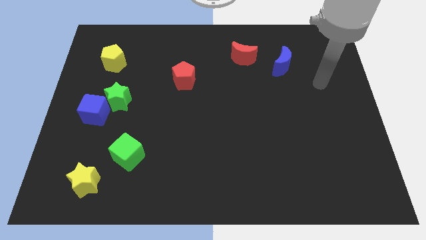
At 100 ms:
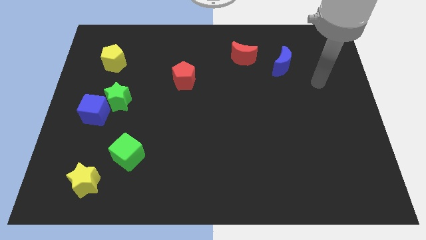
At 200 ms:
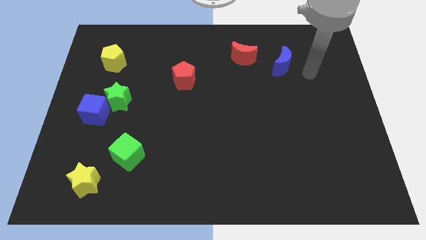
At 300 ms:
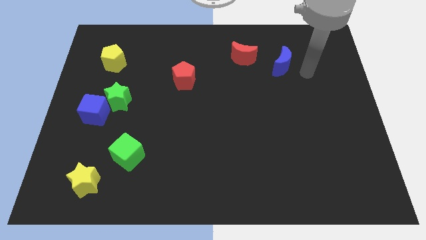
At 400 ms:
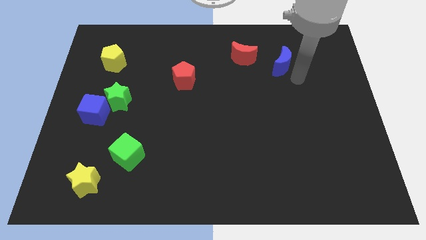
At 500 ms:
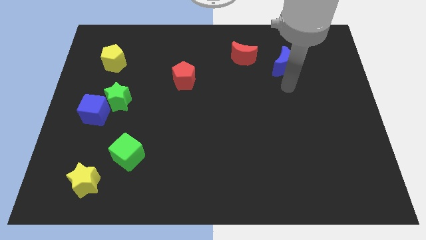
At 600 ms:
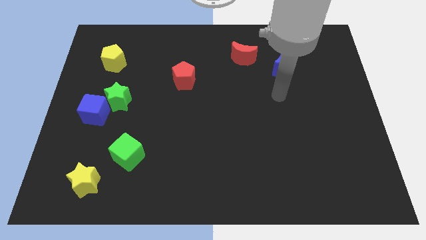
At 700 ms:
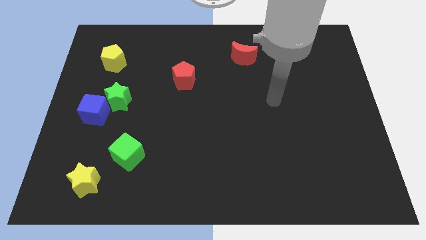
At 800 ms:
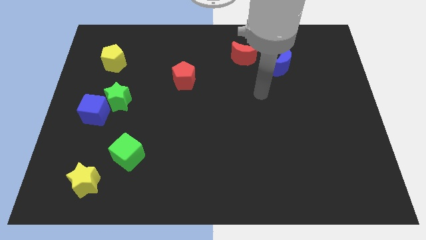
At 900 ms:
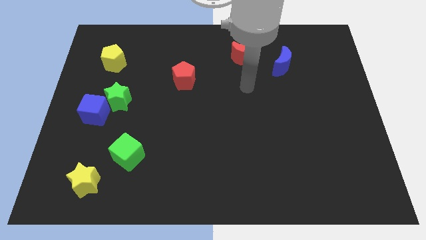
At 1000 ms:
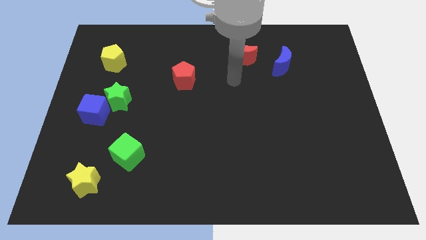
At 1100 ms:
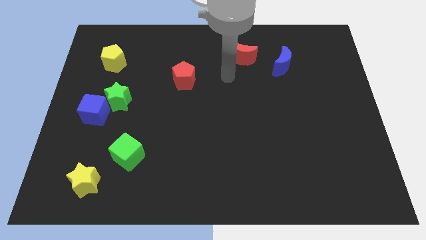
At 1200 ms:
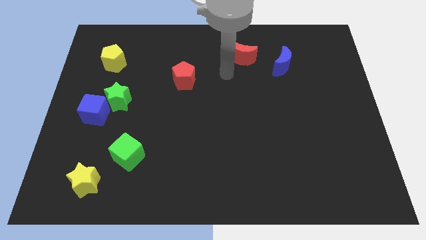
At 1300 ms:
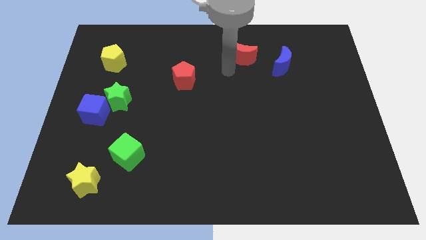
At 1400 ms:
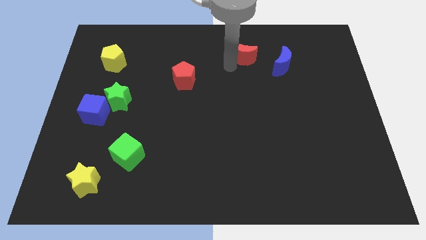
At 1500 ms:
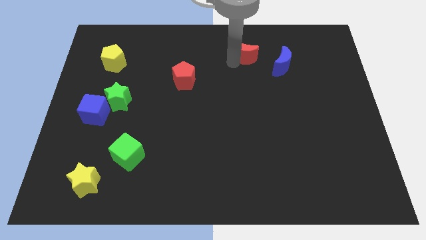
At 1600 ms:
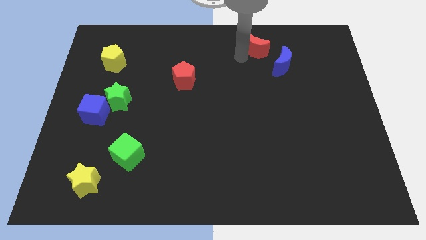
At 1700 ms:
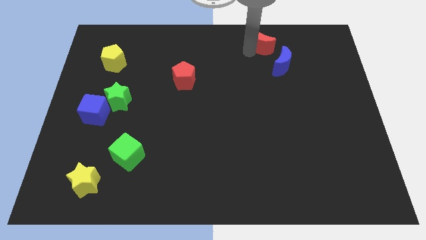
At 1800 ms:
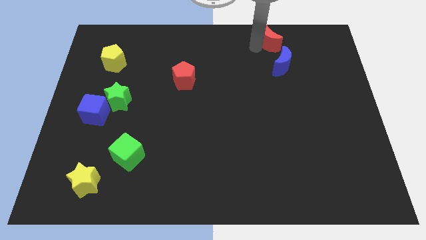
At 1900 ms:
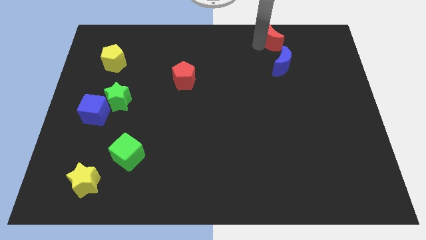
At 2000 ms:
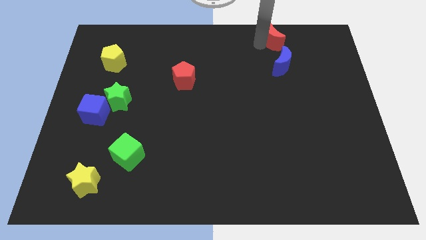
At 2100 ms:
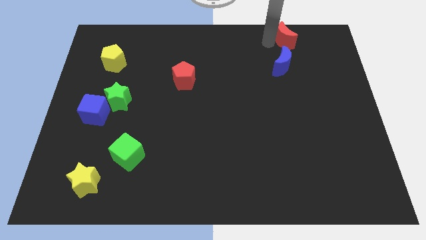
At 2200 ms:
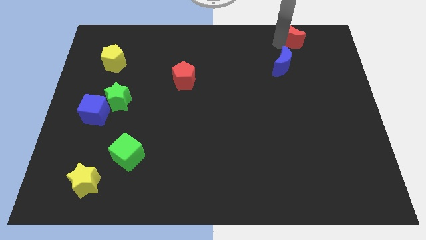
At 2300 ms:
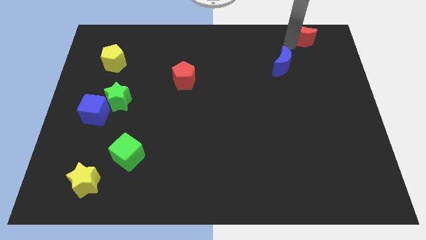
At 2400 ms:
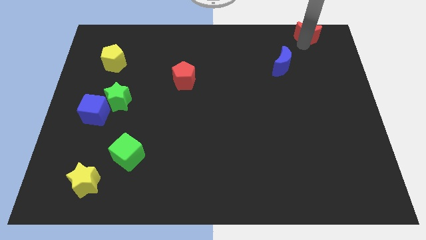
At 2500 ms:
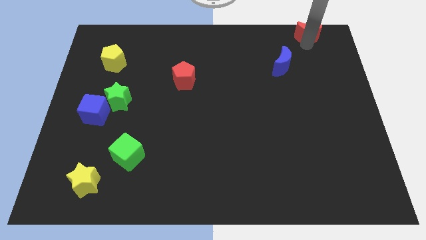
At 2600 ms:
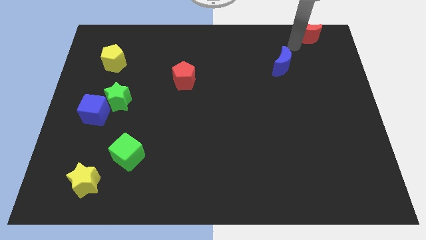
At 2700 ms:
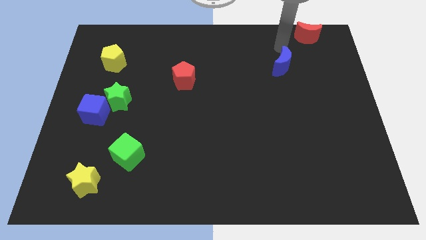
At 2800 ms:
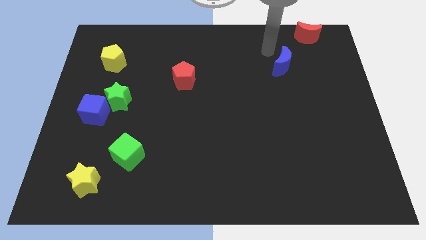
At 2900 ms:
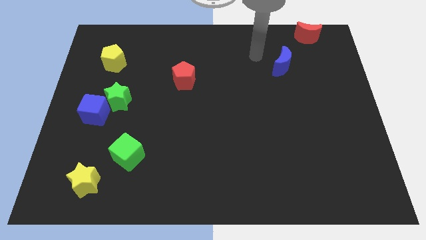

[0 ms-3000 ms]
place the red moon at the top right side of the blue moon

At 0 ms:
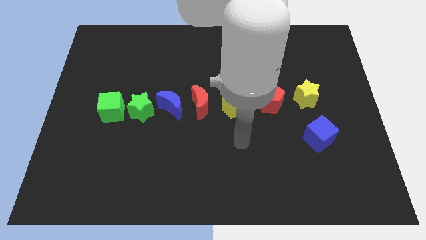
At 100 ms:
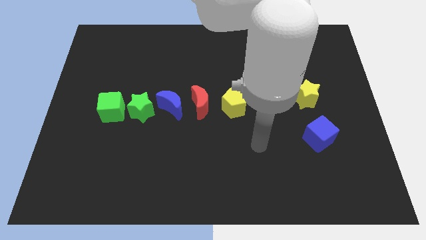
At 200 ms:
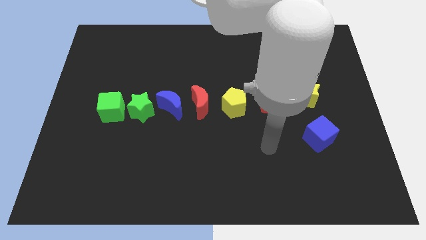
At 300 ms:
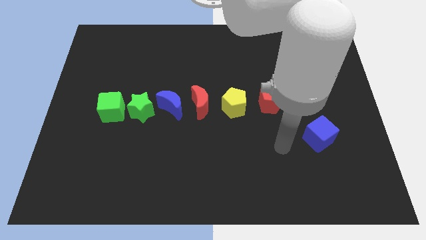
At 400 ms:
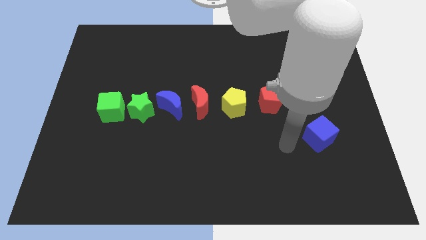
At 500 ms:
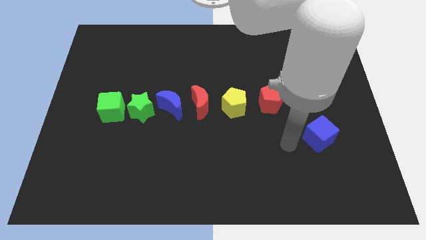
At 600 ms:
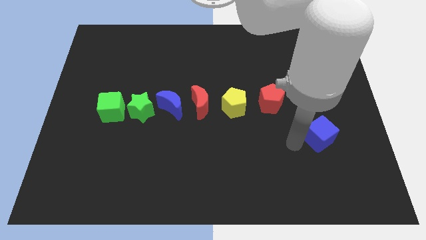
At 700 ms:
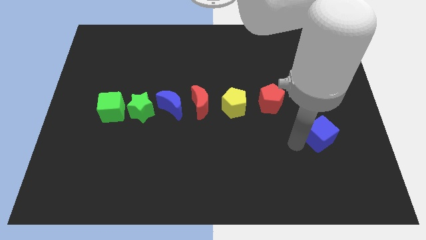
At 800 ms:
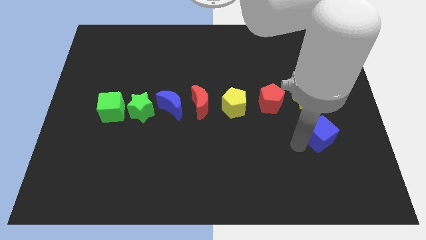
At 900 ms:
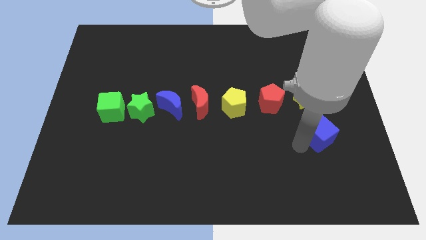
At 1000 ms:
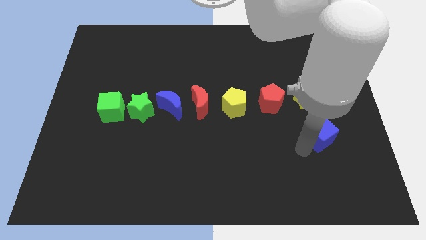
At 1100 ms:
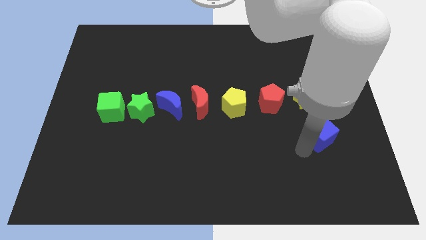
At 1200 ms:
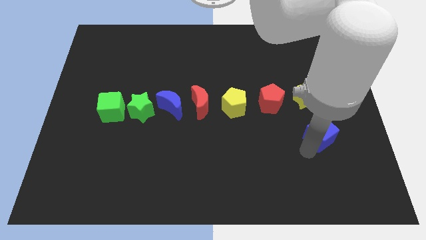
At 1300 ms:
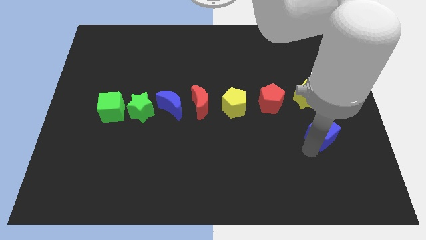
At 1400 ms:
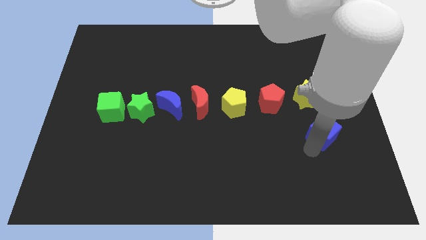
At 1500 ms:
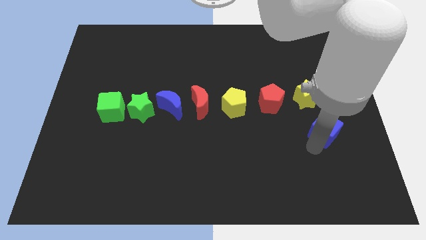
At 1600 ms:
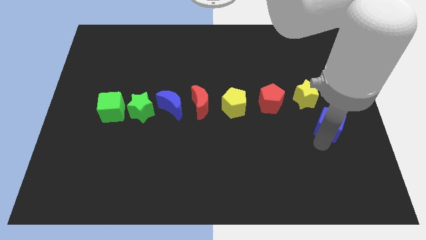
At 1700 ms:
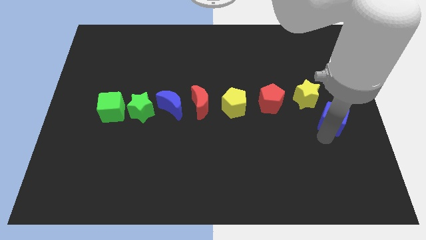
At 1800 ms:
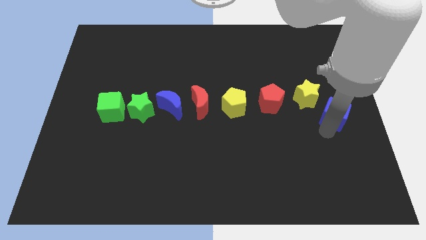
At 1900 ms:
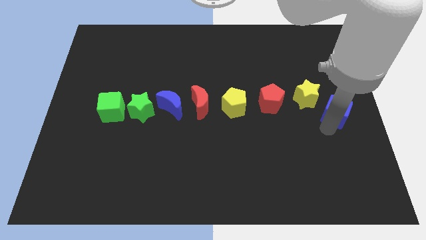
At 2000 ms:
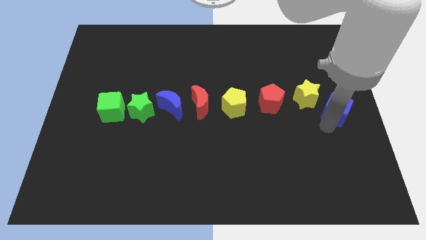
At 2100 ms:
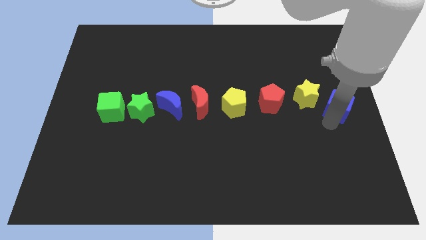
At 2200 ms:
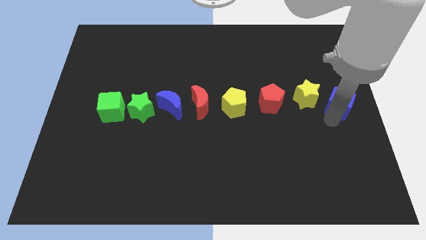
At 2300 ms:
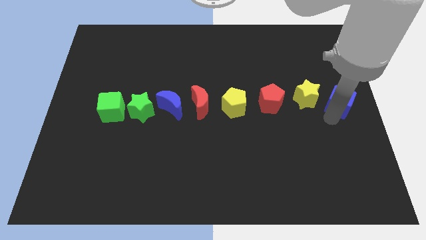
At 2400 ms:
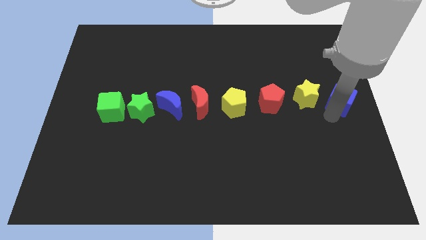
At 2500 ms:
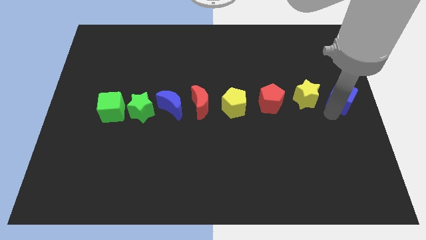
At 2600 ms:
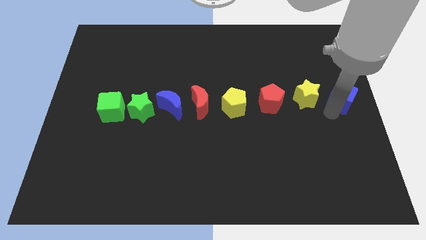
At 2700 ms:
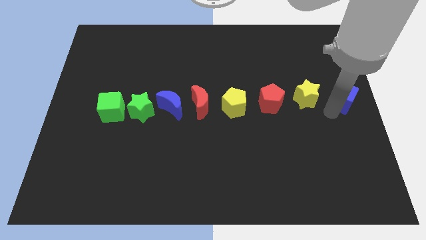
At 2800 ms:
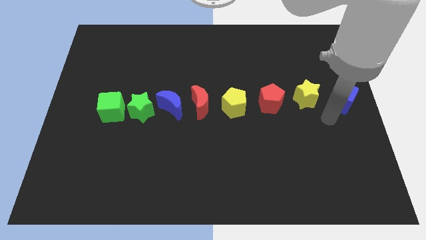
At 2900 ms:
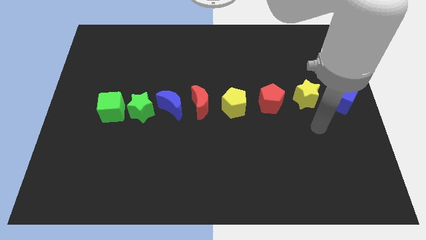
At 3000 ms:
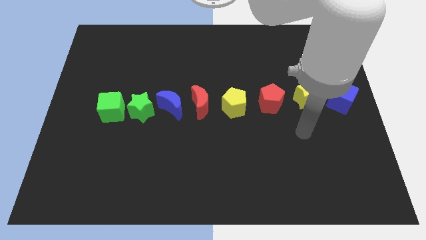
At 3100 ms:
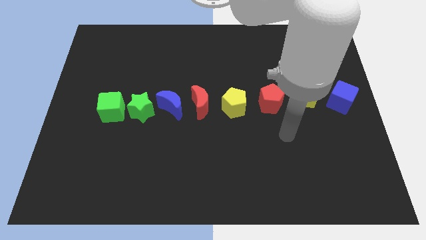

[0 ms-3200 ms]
move the blu cube to the right side of the yellow star

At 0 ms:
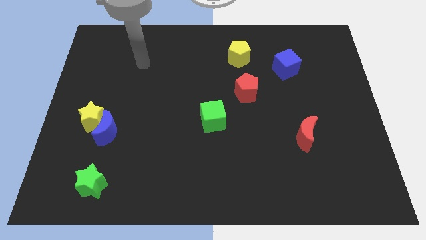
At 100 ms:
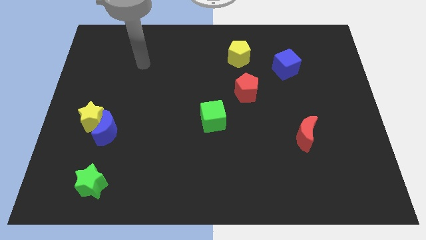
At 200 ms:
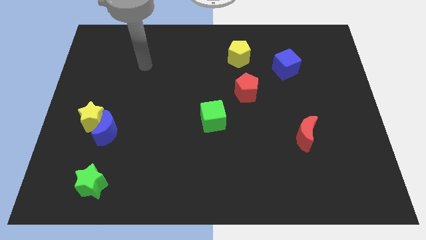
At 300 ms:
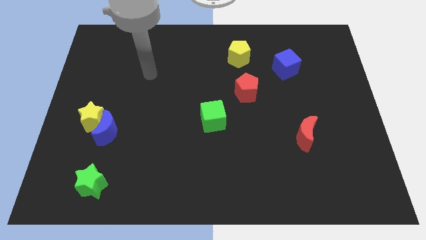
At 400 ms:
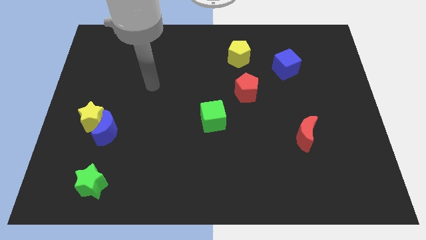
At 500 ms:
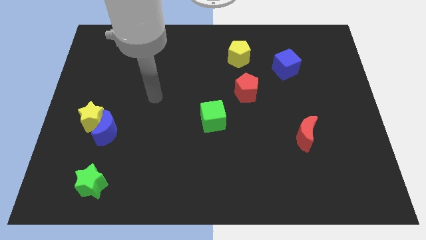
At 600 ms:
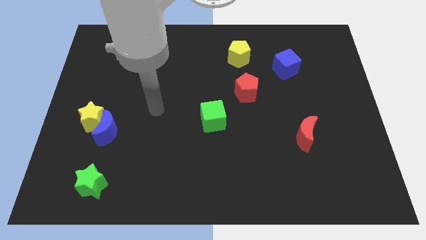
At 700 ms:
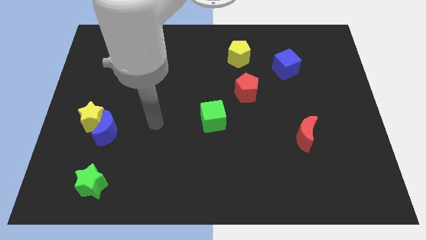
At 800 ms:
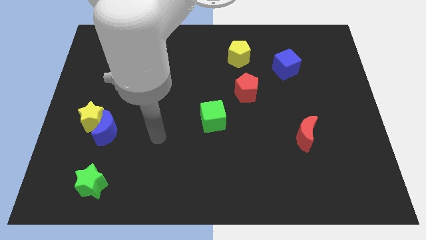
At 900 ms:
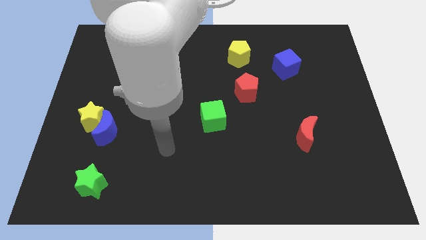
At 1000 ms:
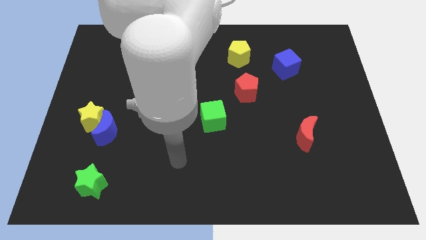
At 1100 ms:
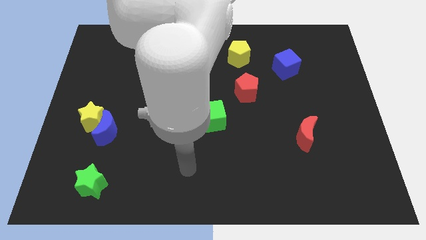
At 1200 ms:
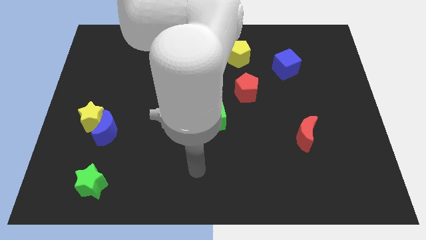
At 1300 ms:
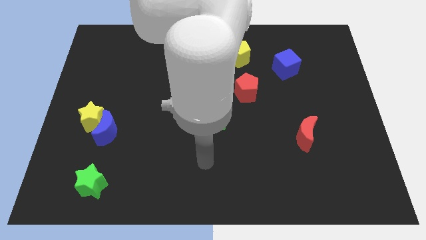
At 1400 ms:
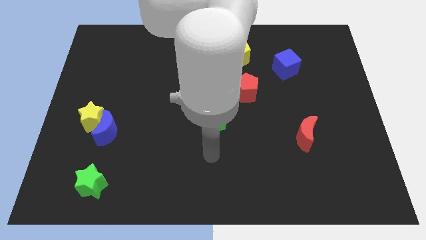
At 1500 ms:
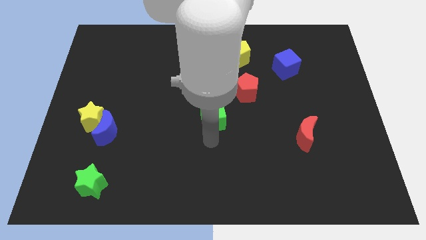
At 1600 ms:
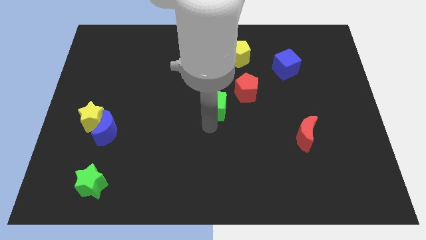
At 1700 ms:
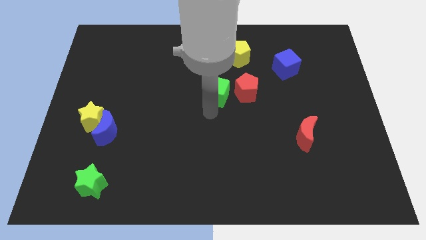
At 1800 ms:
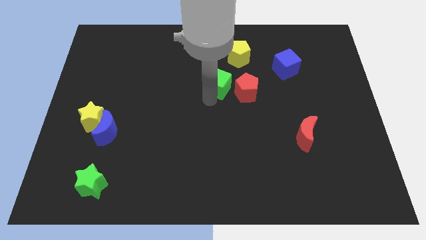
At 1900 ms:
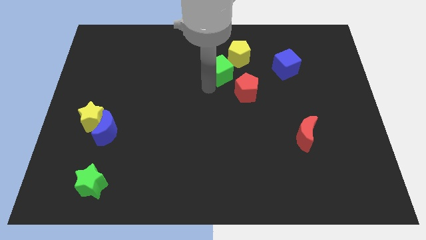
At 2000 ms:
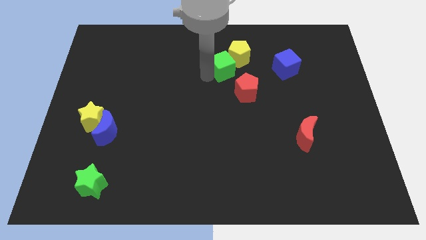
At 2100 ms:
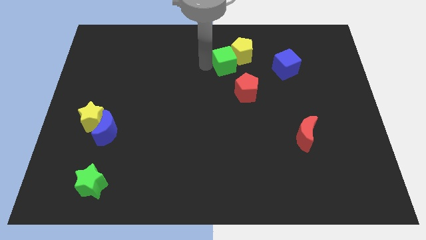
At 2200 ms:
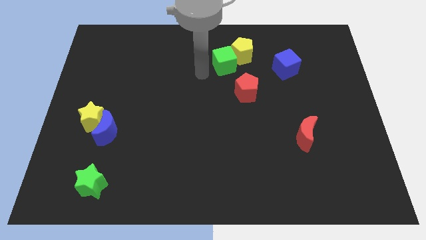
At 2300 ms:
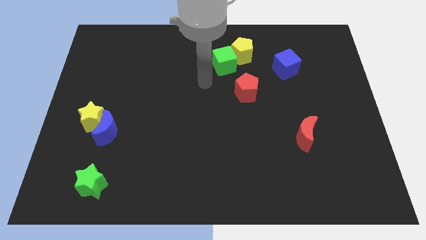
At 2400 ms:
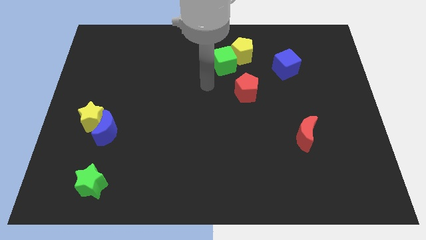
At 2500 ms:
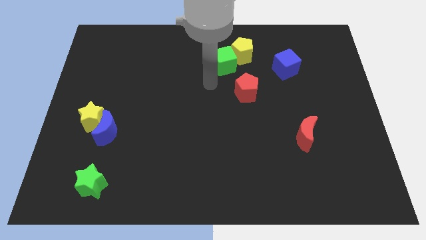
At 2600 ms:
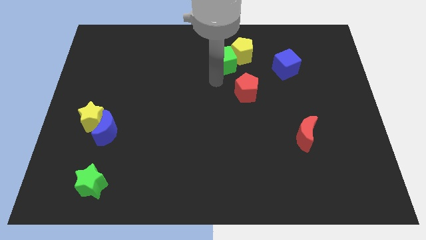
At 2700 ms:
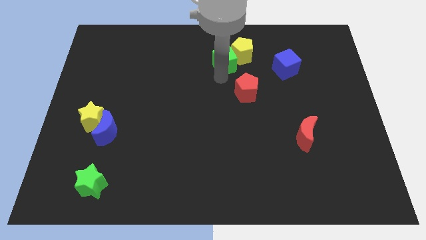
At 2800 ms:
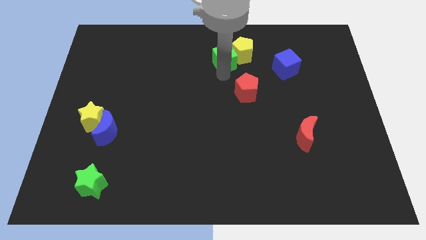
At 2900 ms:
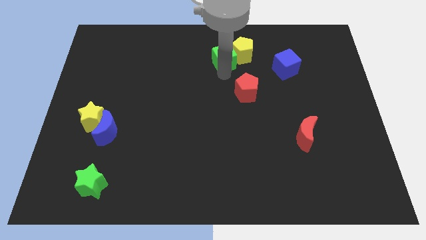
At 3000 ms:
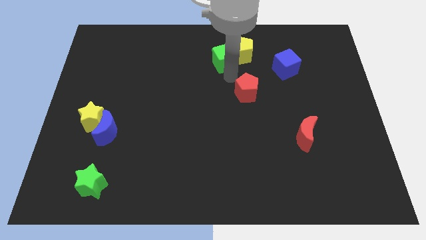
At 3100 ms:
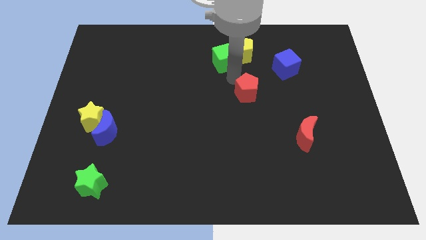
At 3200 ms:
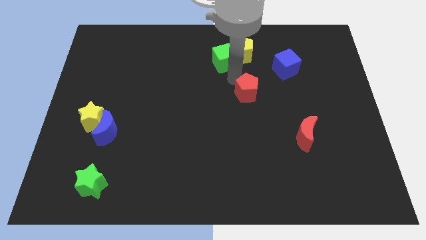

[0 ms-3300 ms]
push the green cube into yellow pentagon
